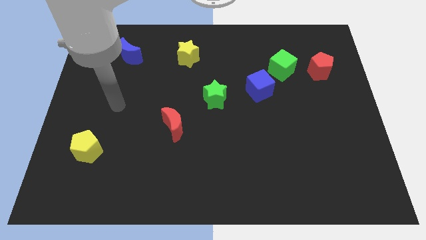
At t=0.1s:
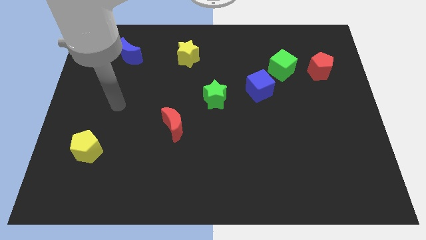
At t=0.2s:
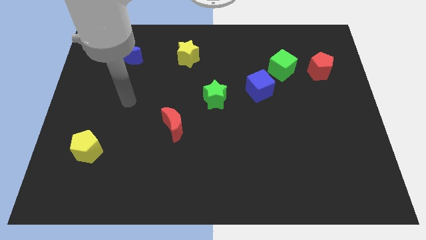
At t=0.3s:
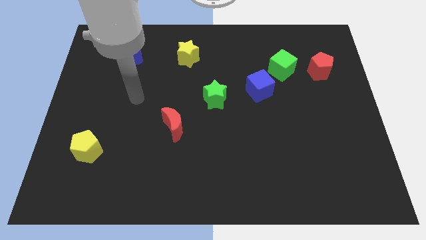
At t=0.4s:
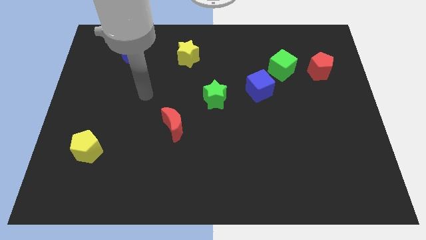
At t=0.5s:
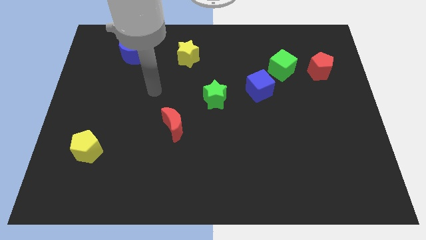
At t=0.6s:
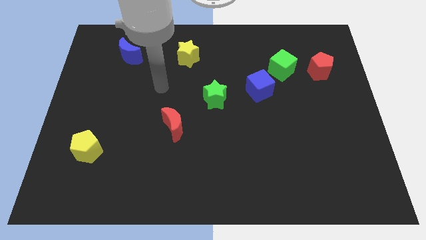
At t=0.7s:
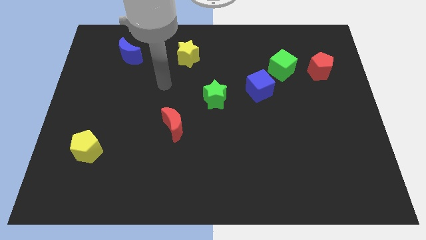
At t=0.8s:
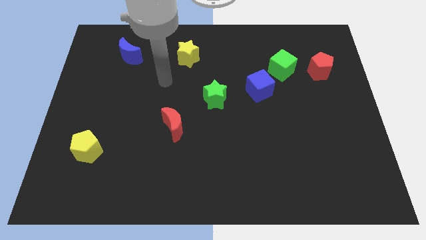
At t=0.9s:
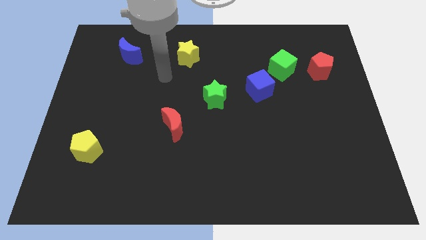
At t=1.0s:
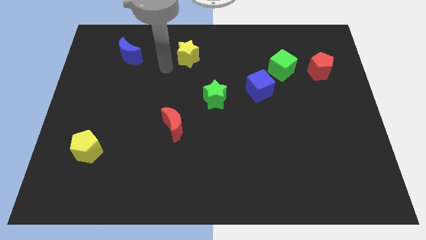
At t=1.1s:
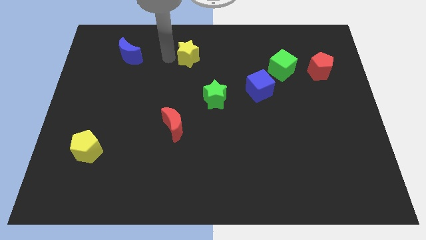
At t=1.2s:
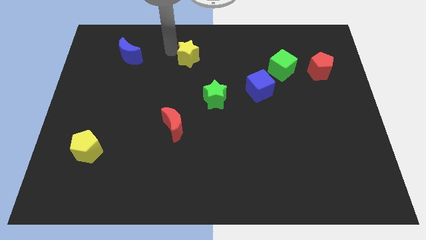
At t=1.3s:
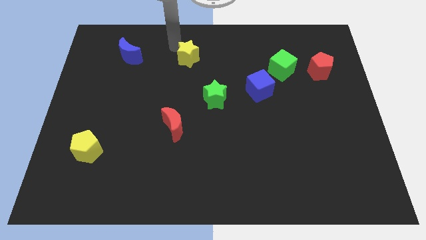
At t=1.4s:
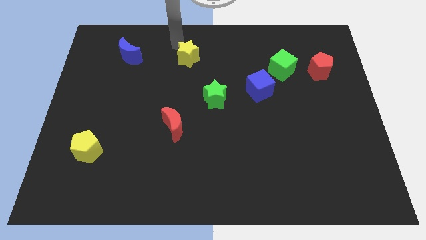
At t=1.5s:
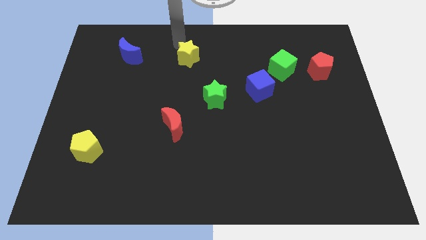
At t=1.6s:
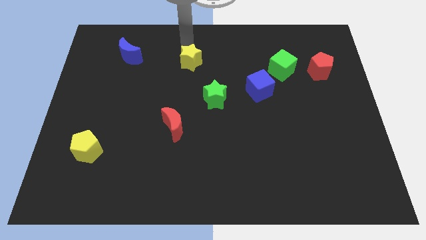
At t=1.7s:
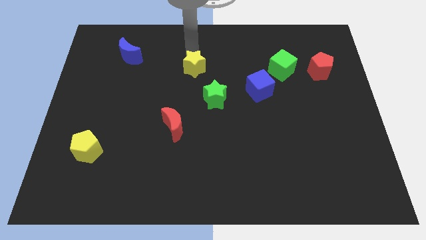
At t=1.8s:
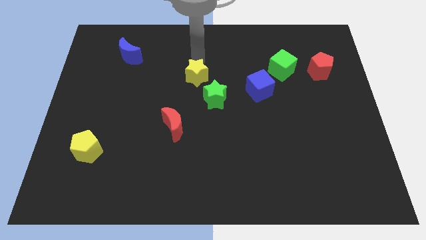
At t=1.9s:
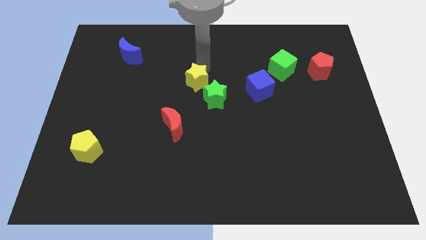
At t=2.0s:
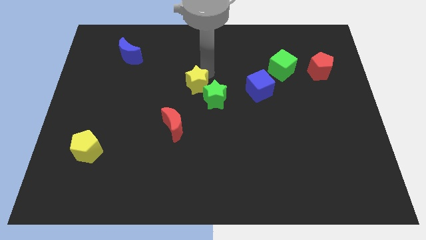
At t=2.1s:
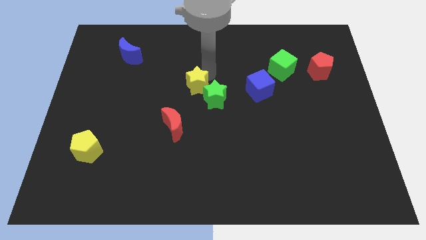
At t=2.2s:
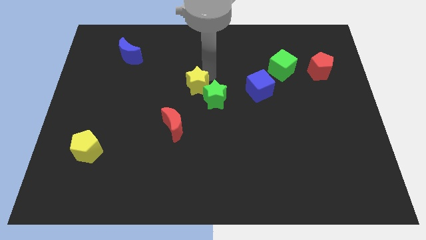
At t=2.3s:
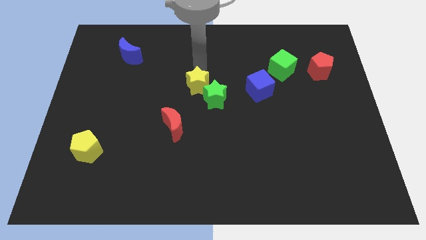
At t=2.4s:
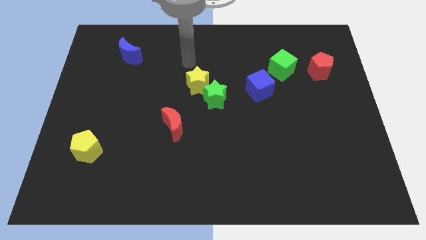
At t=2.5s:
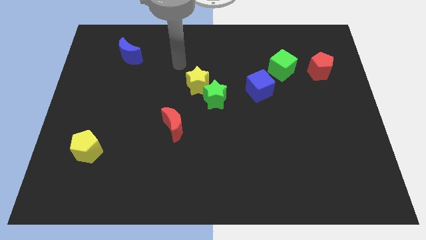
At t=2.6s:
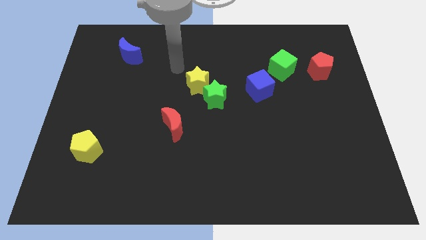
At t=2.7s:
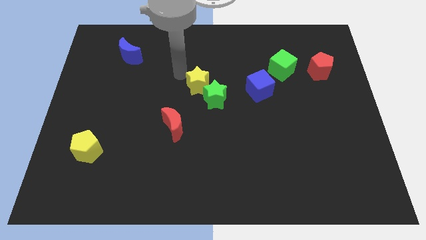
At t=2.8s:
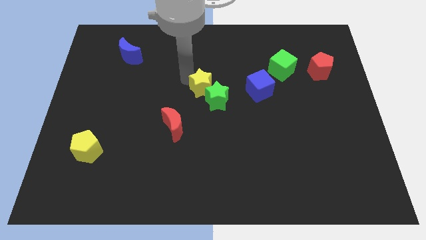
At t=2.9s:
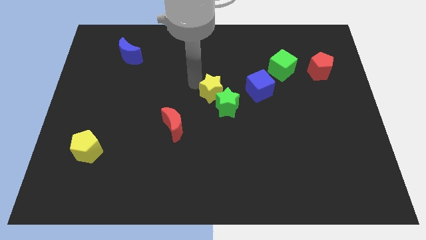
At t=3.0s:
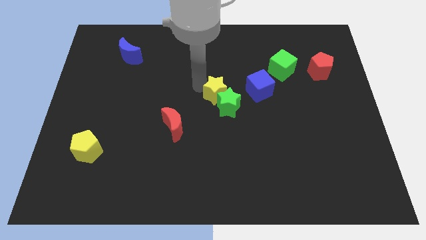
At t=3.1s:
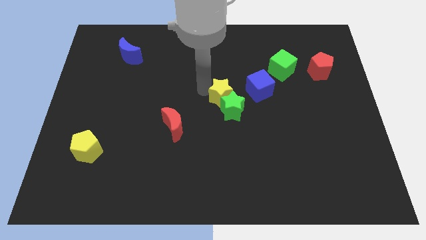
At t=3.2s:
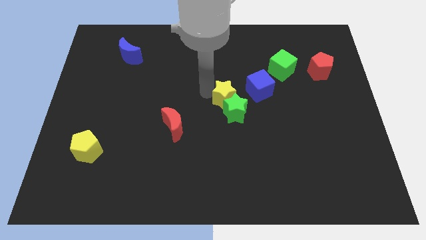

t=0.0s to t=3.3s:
push the yellow star into green star together to center

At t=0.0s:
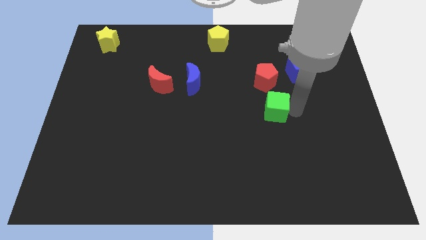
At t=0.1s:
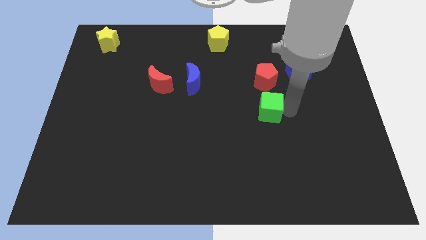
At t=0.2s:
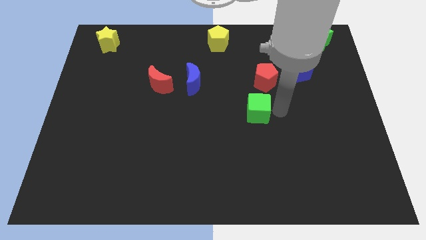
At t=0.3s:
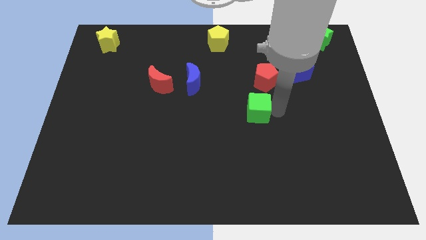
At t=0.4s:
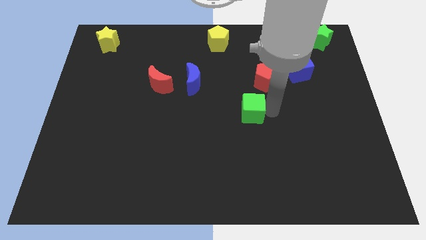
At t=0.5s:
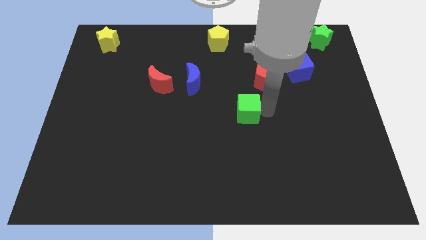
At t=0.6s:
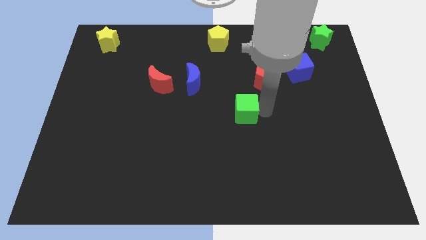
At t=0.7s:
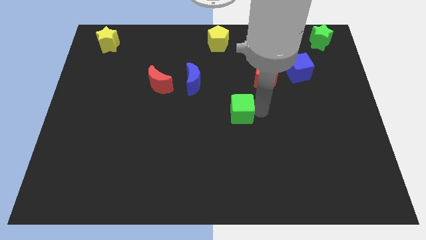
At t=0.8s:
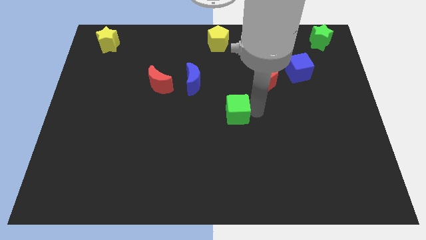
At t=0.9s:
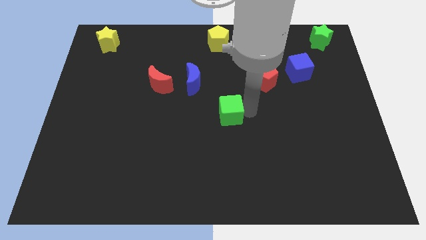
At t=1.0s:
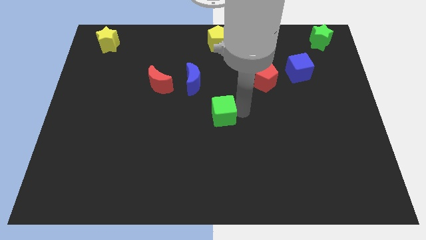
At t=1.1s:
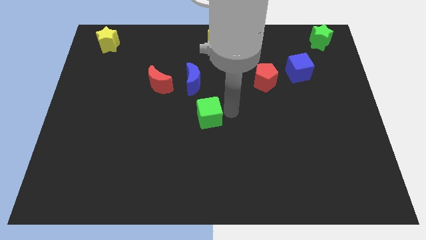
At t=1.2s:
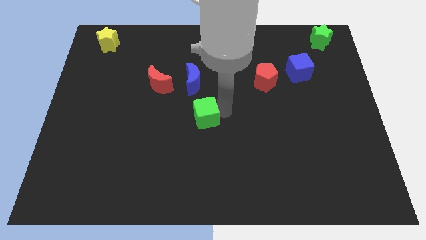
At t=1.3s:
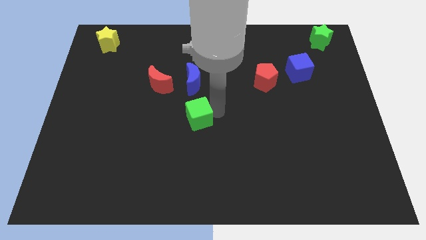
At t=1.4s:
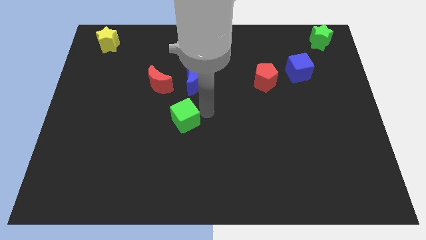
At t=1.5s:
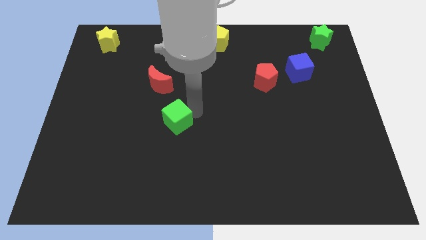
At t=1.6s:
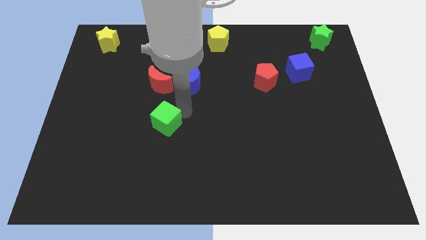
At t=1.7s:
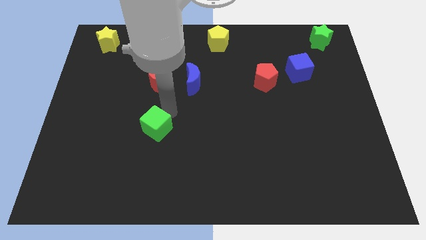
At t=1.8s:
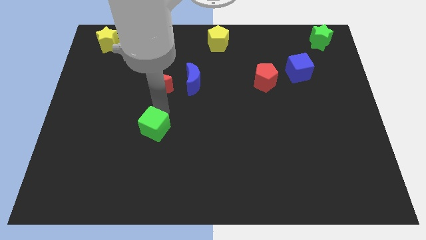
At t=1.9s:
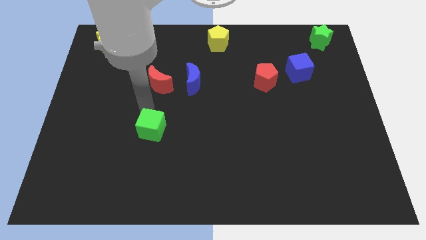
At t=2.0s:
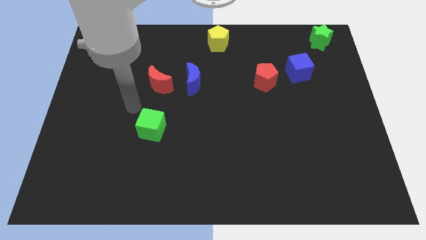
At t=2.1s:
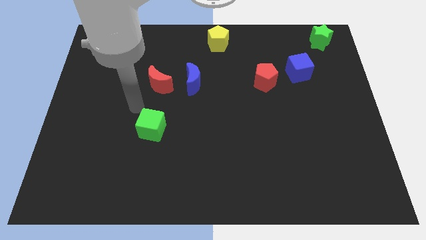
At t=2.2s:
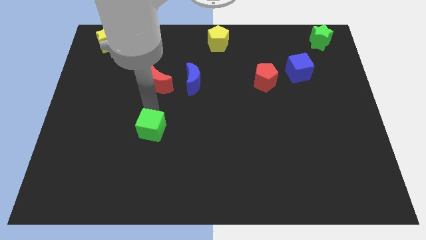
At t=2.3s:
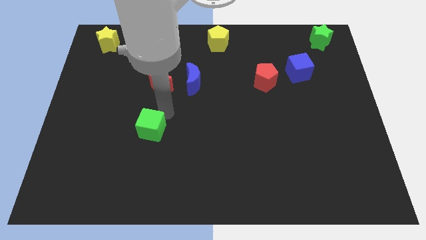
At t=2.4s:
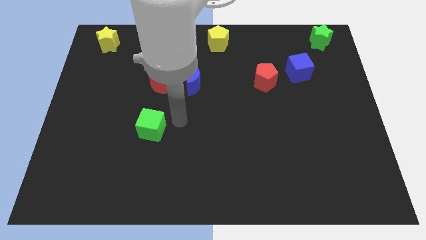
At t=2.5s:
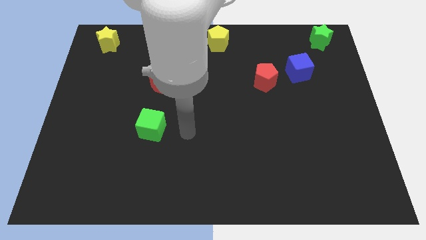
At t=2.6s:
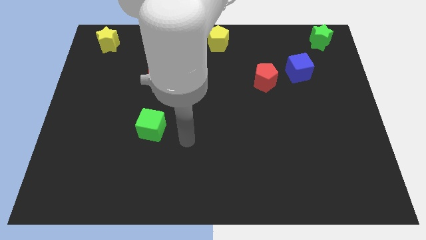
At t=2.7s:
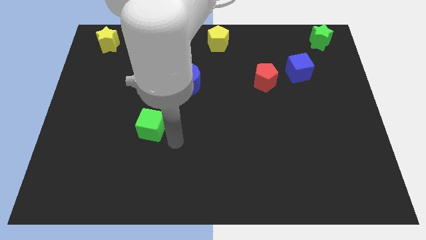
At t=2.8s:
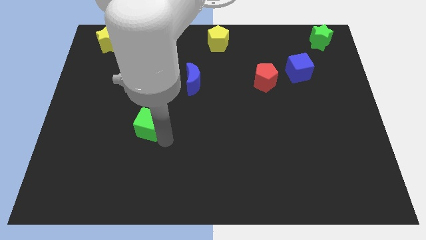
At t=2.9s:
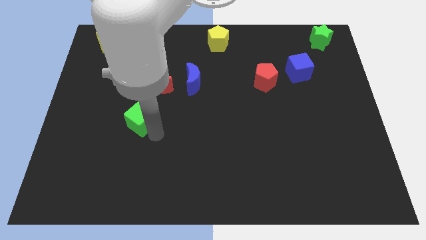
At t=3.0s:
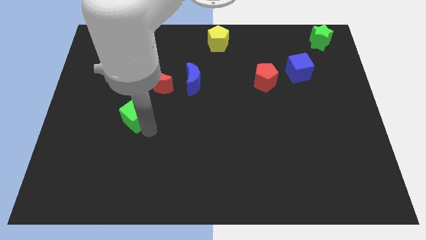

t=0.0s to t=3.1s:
push the green cube to the bottom left of the red crescent

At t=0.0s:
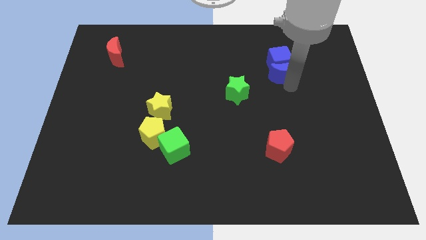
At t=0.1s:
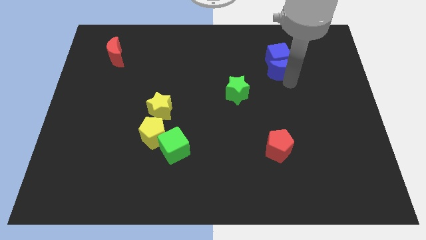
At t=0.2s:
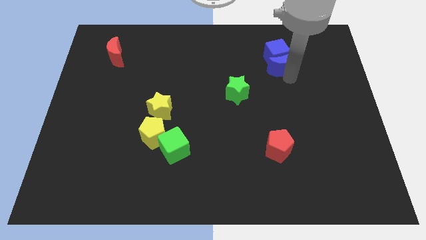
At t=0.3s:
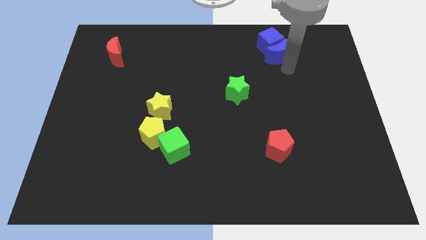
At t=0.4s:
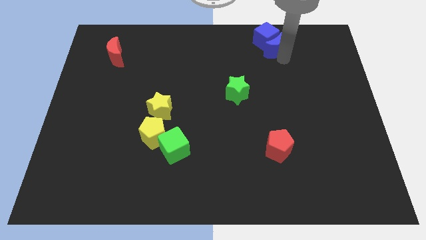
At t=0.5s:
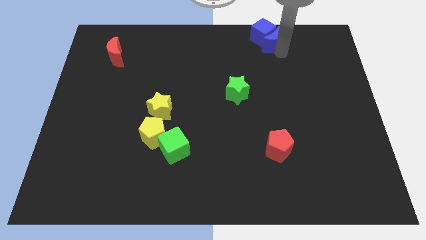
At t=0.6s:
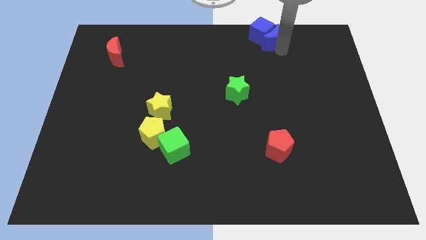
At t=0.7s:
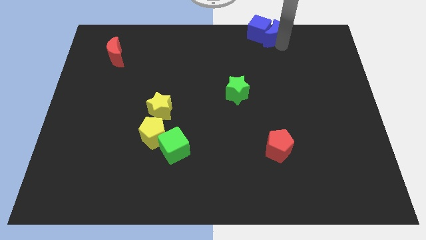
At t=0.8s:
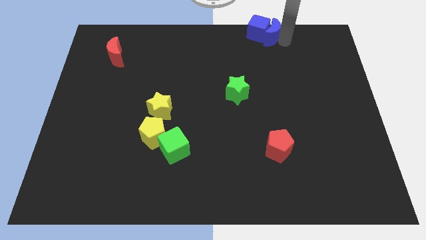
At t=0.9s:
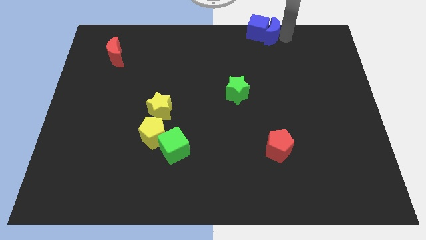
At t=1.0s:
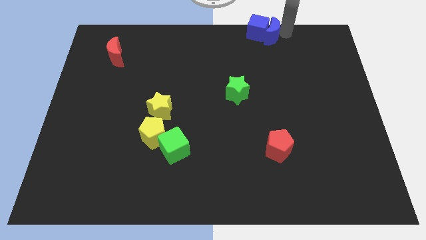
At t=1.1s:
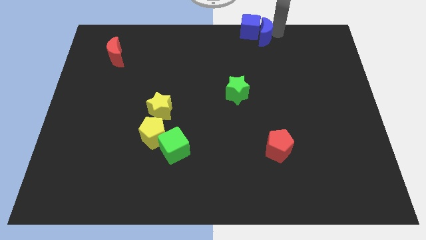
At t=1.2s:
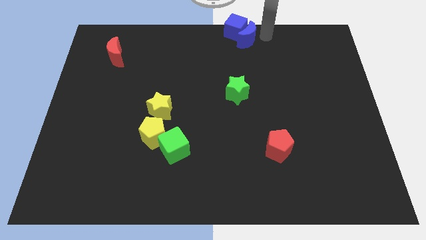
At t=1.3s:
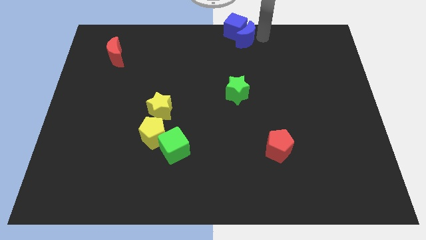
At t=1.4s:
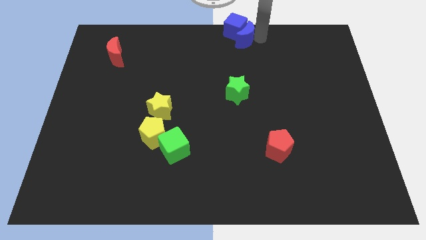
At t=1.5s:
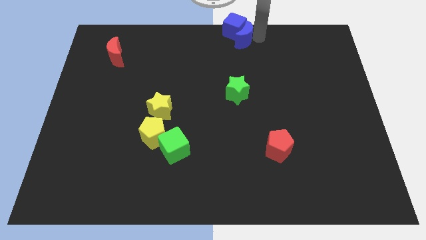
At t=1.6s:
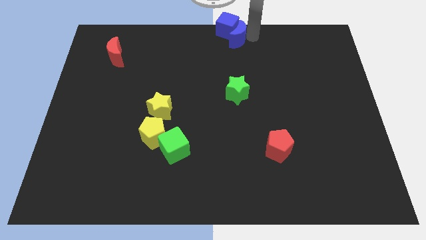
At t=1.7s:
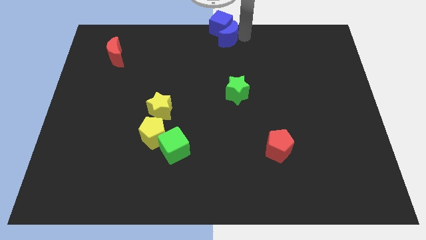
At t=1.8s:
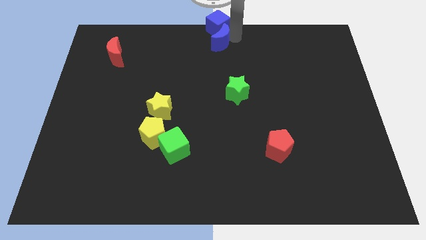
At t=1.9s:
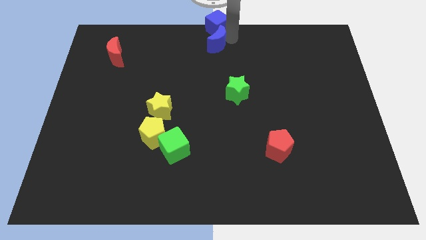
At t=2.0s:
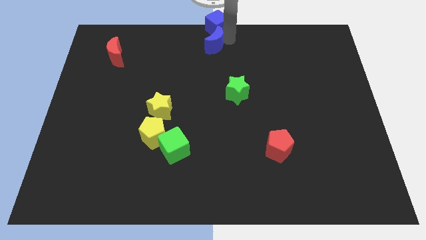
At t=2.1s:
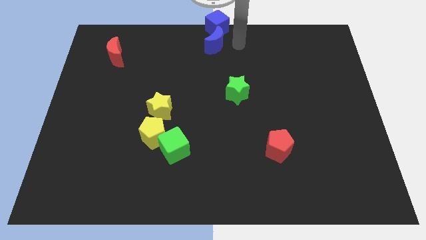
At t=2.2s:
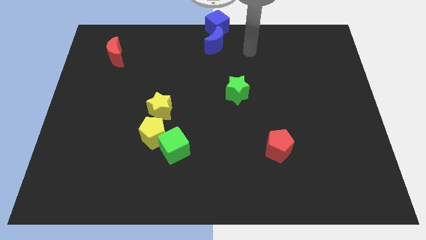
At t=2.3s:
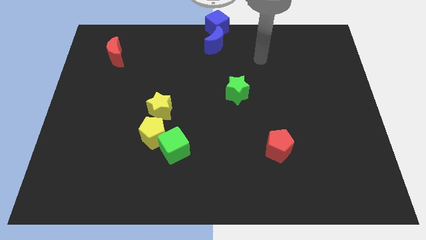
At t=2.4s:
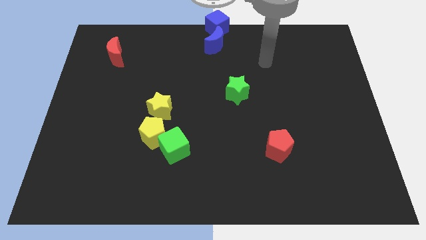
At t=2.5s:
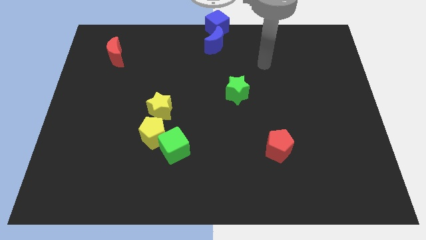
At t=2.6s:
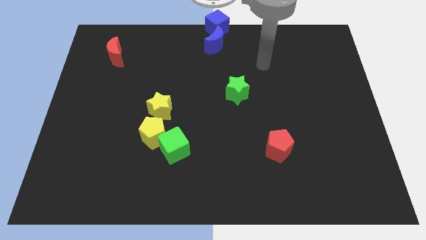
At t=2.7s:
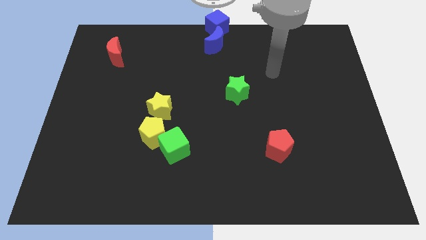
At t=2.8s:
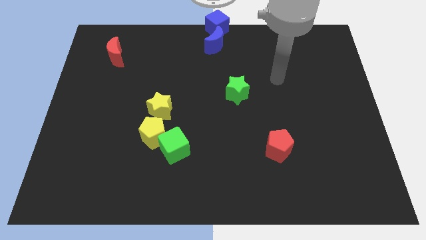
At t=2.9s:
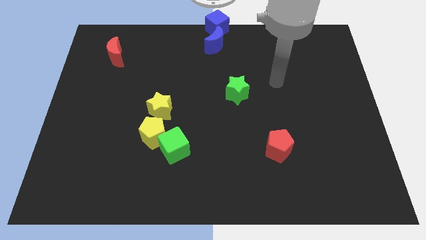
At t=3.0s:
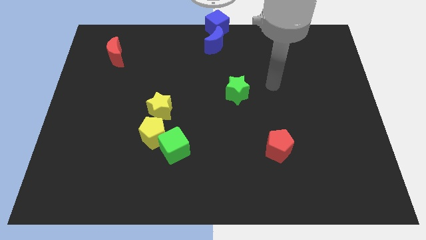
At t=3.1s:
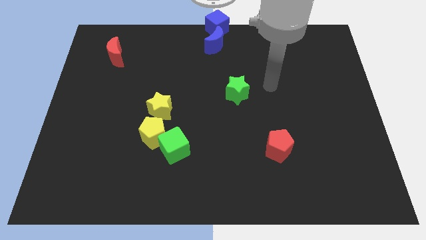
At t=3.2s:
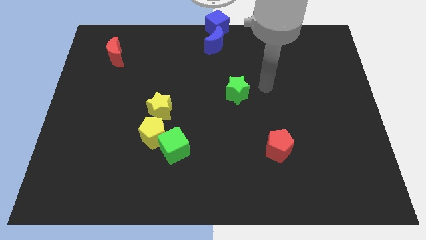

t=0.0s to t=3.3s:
push blue blocks into the top middle of the board
